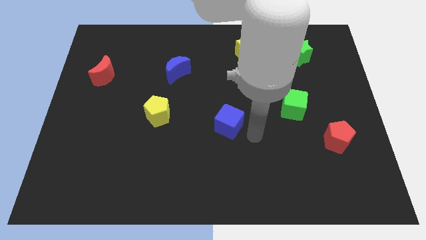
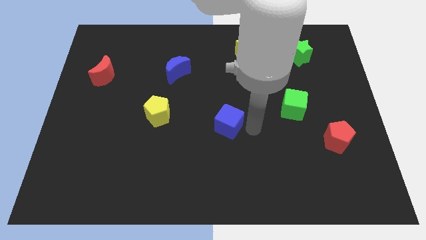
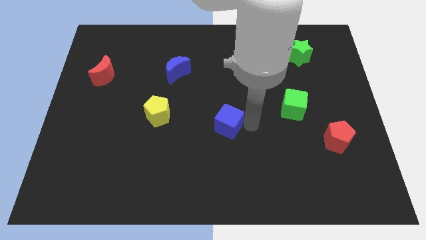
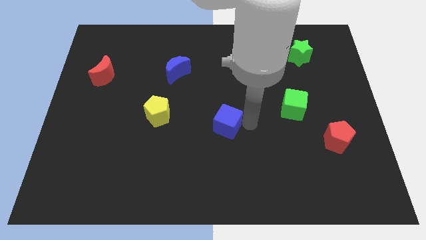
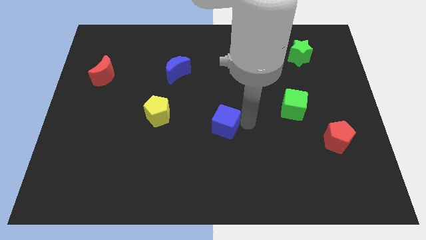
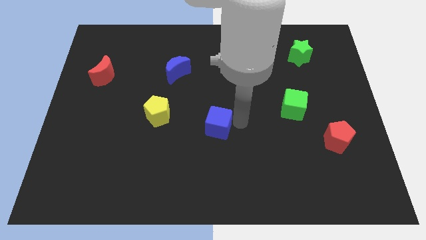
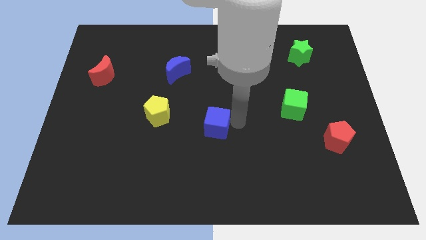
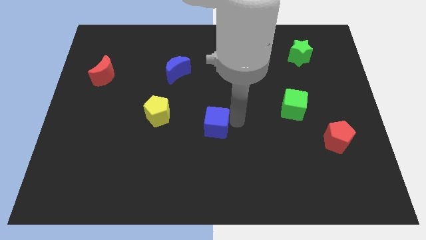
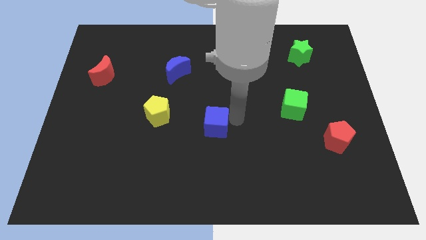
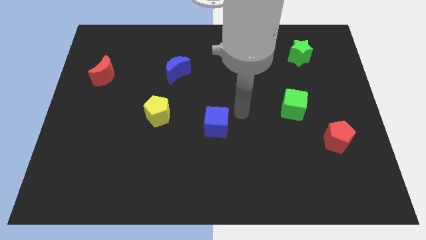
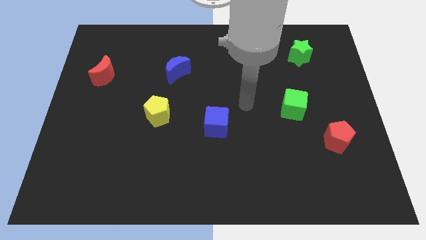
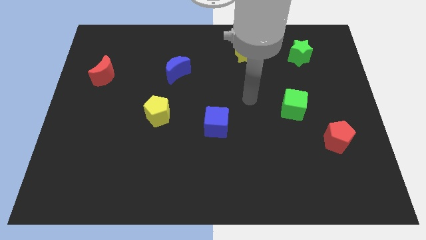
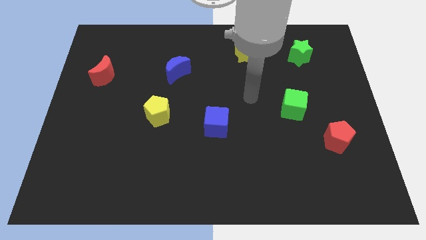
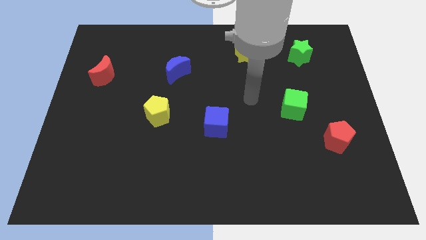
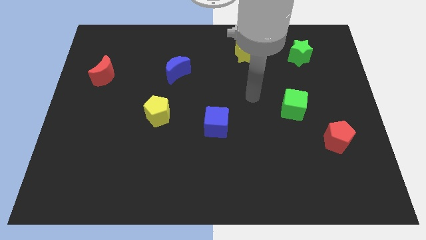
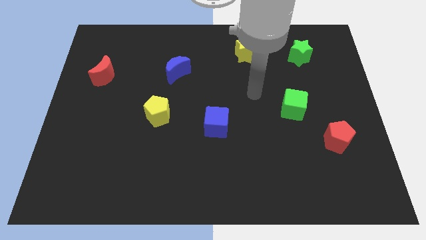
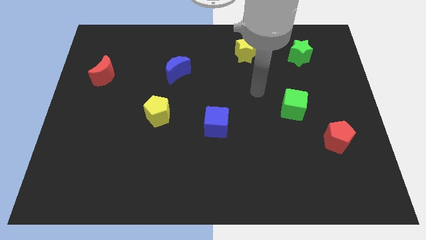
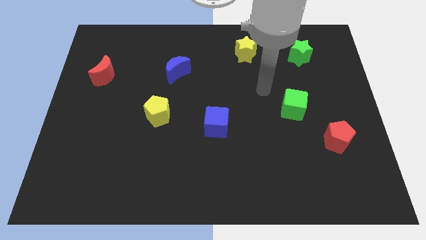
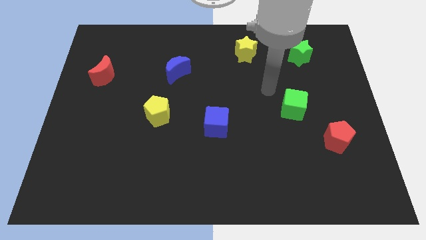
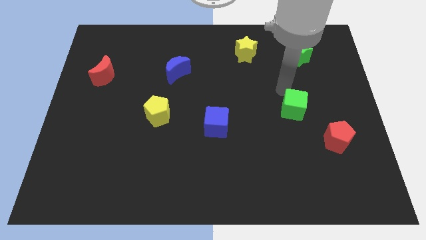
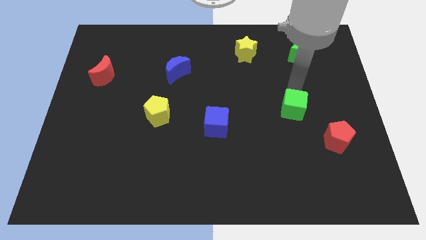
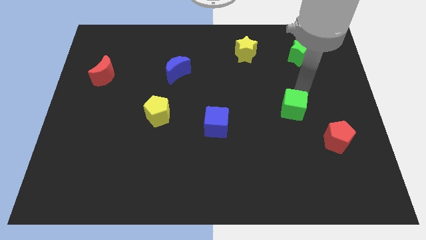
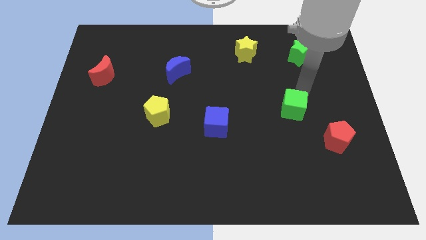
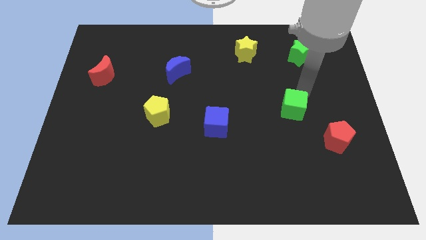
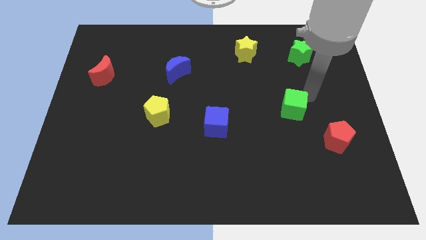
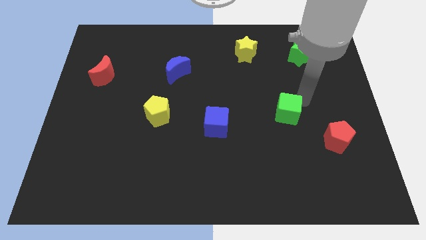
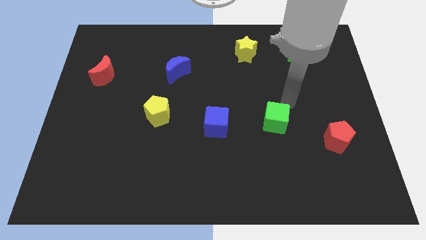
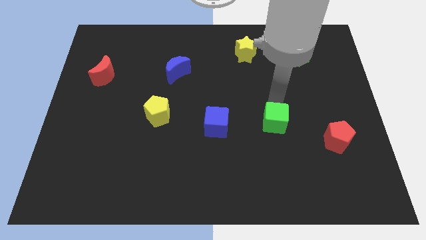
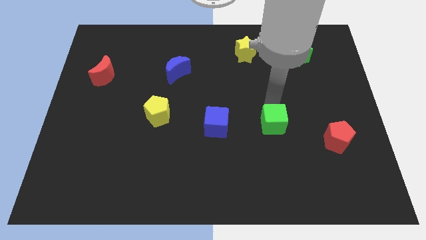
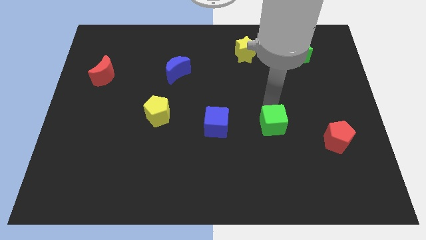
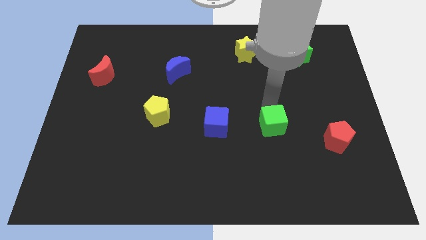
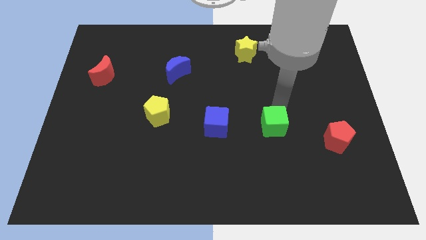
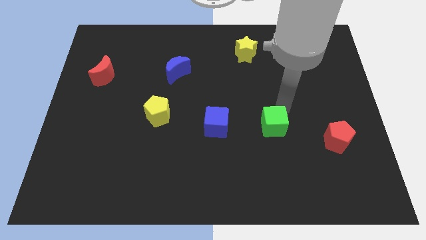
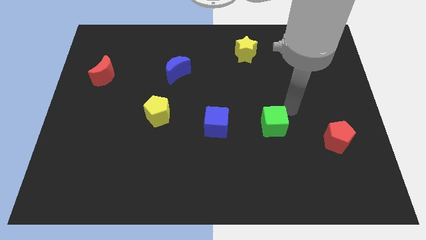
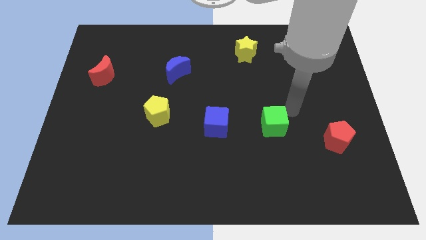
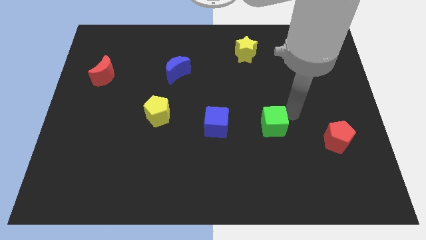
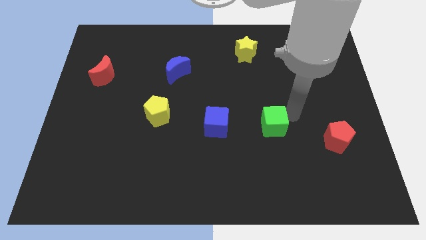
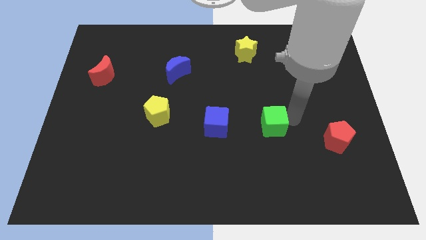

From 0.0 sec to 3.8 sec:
move the blue cube and green cube parallel to each other

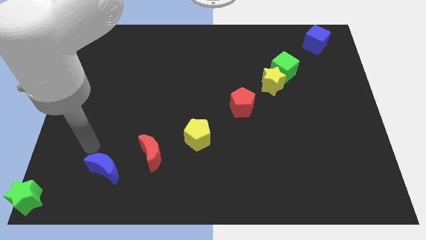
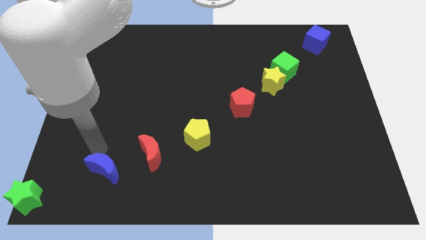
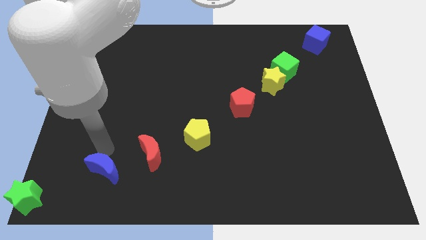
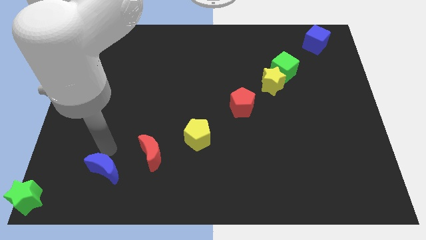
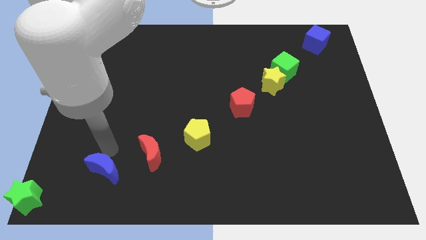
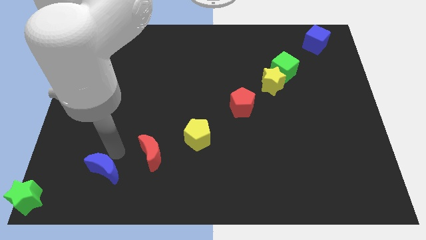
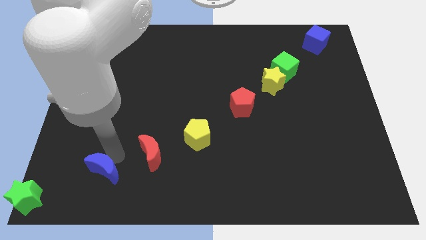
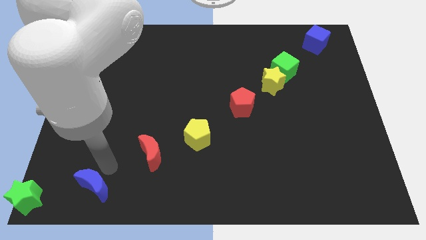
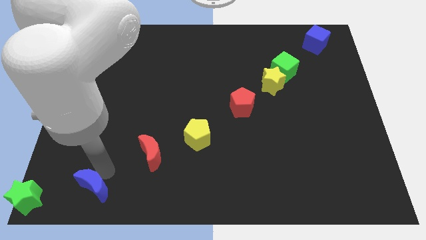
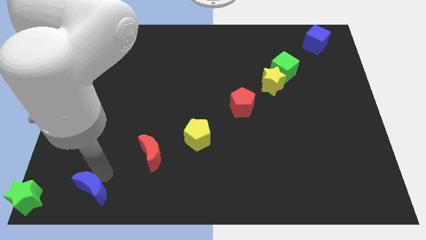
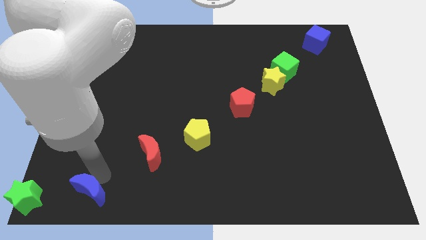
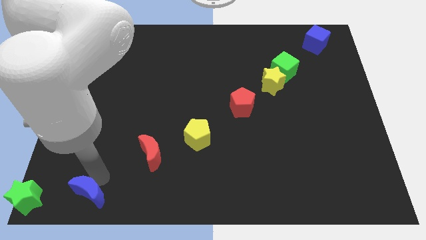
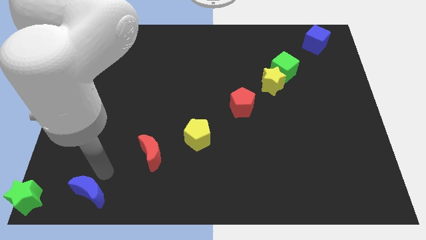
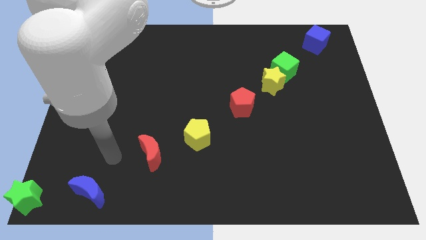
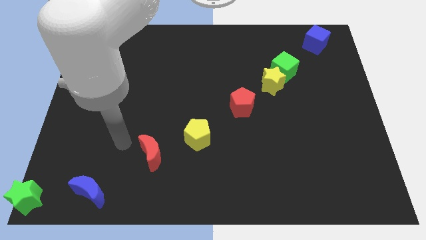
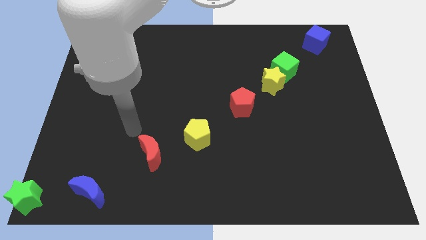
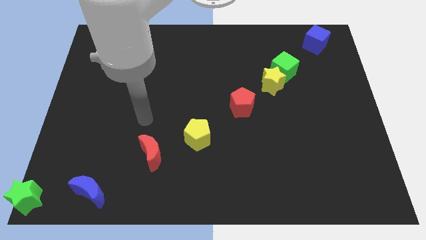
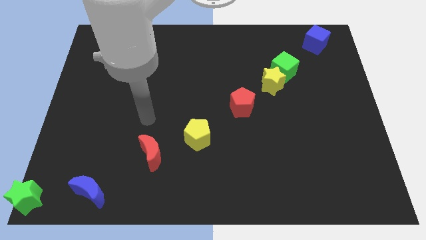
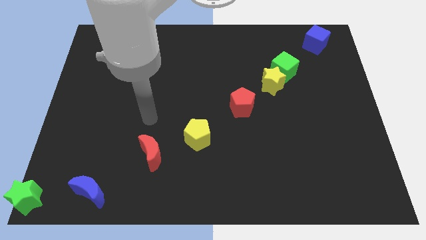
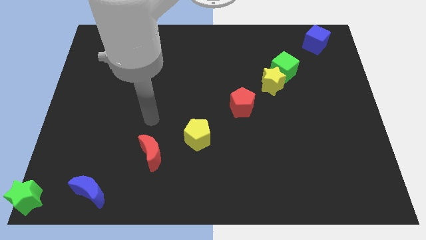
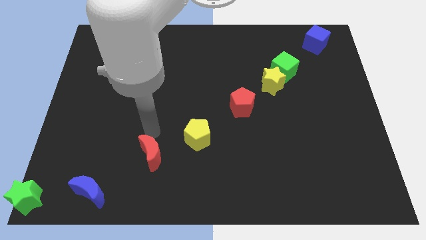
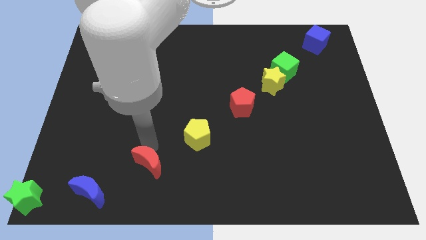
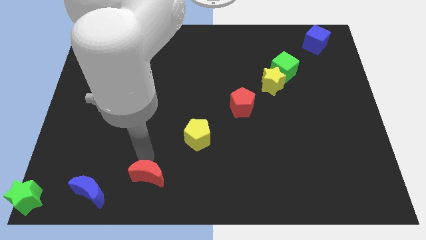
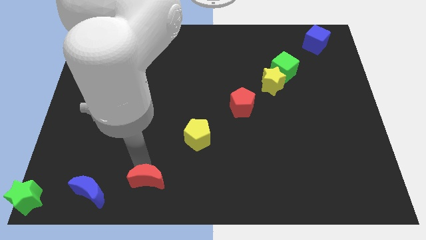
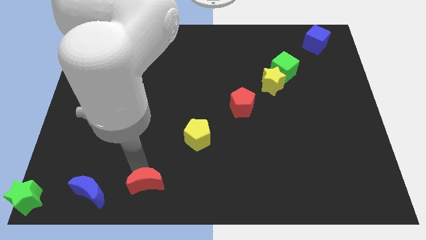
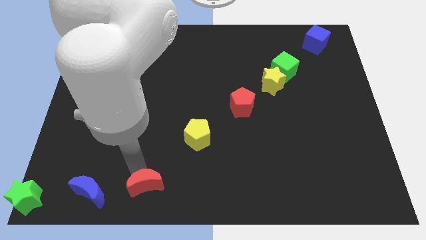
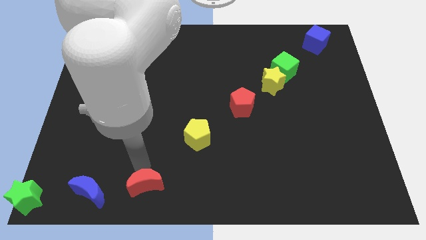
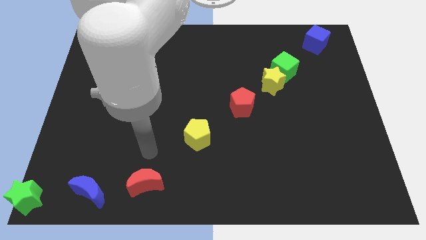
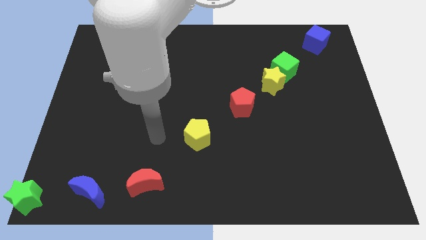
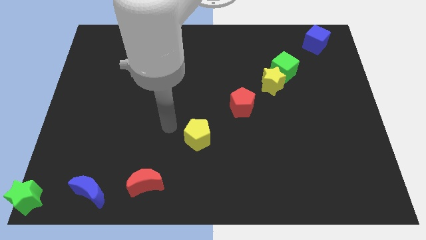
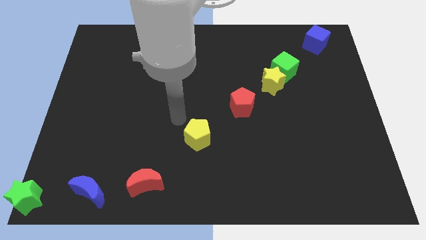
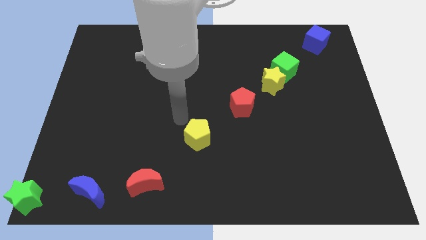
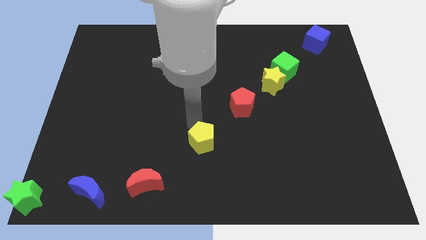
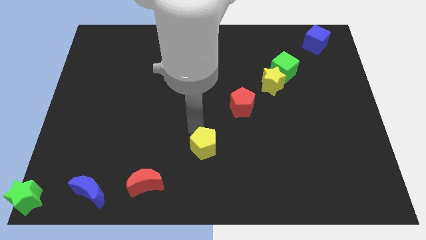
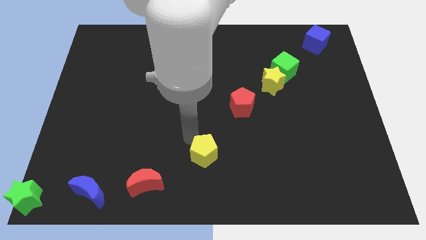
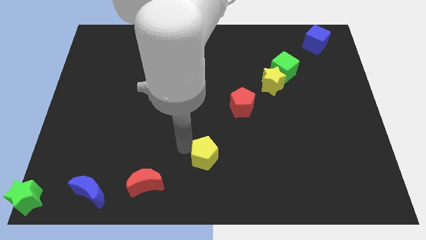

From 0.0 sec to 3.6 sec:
move yellow pentagon slightly down

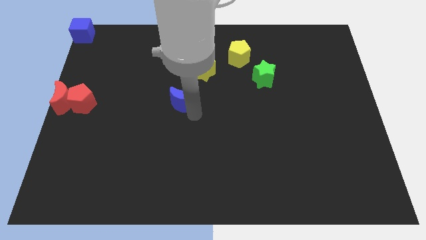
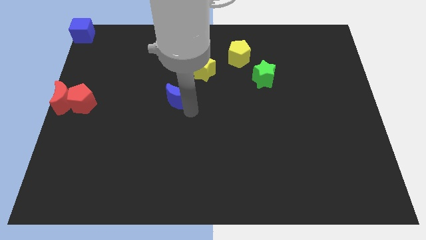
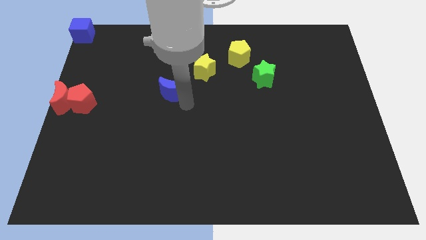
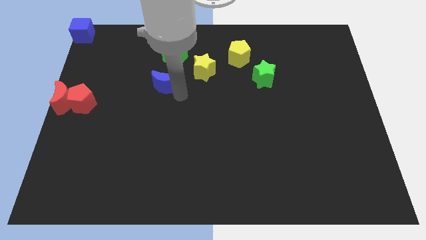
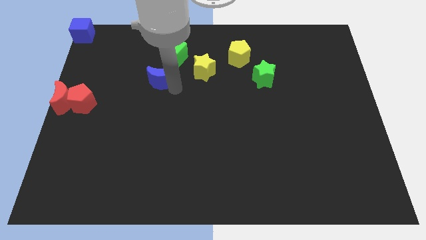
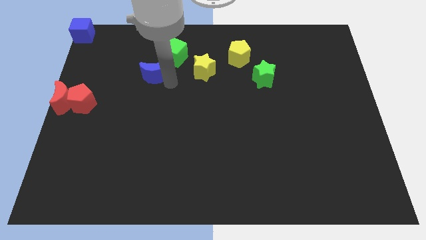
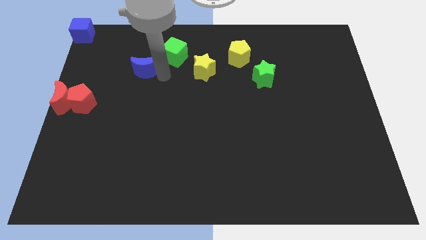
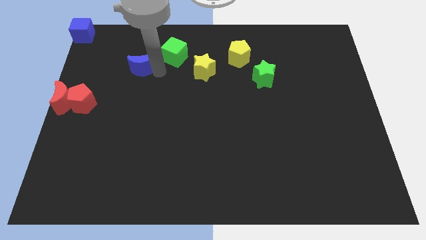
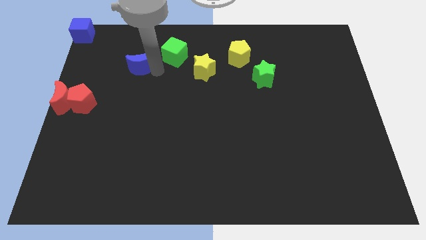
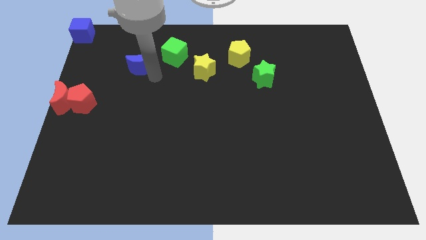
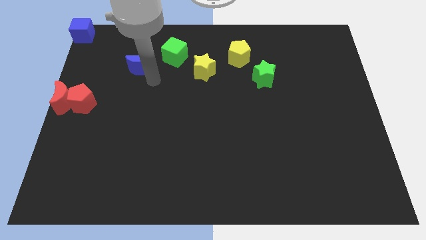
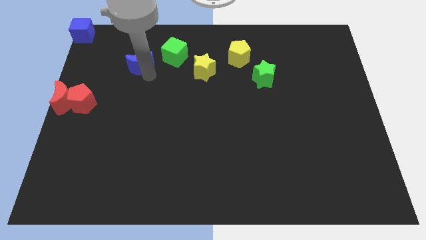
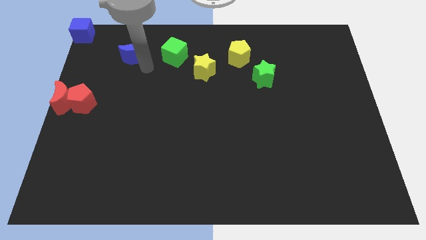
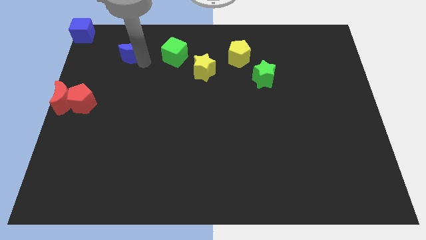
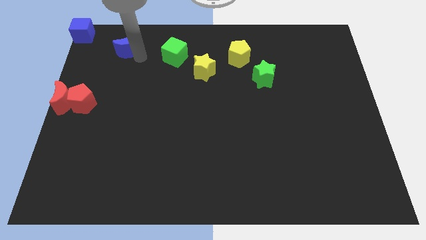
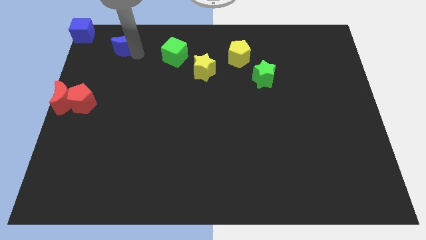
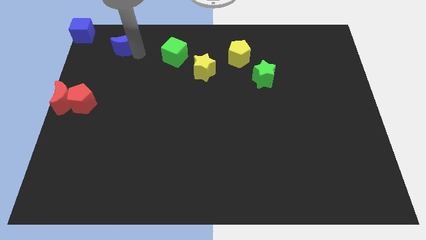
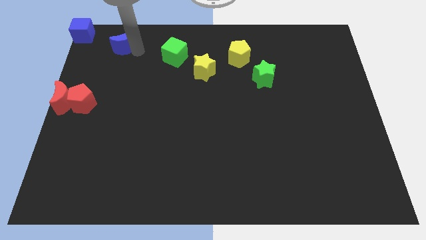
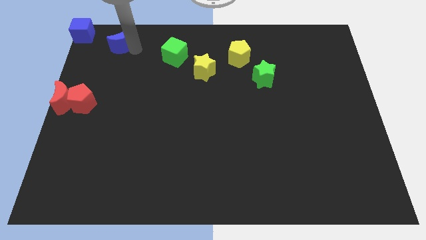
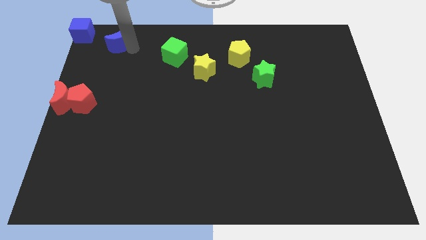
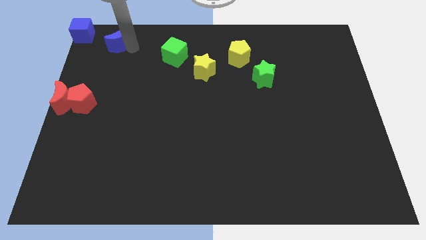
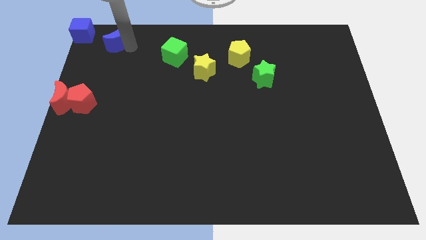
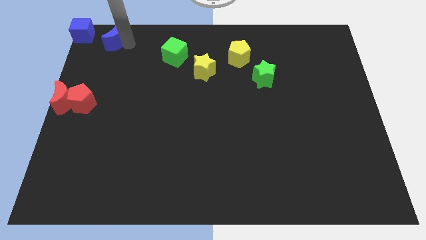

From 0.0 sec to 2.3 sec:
move blue moon close to the blue cube
